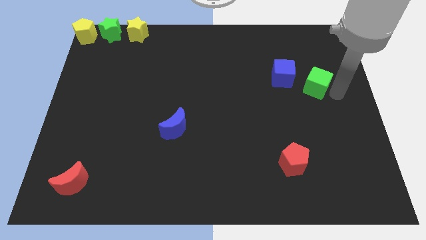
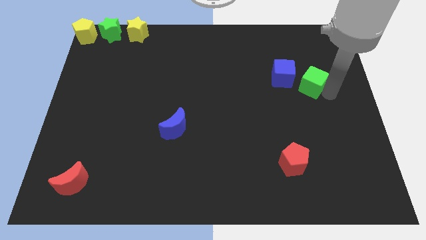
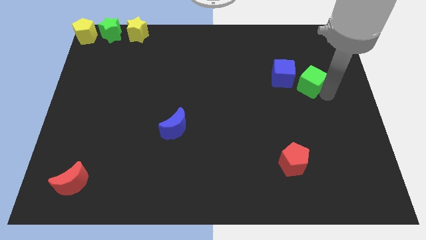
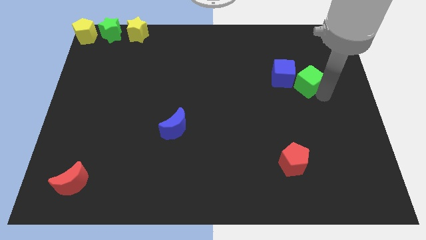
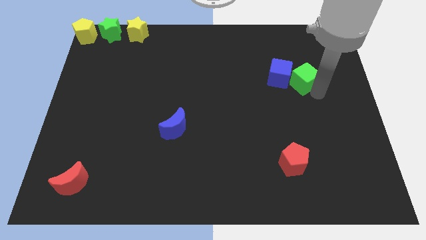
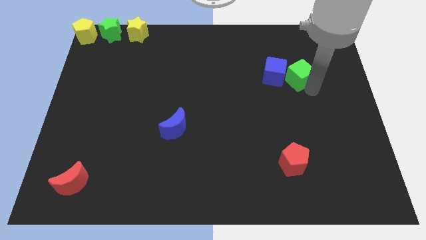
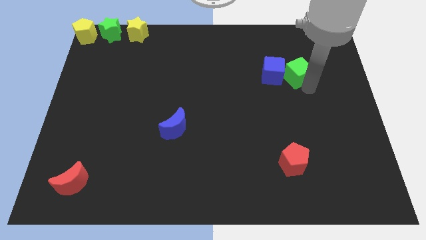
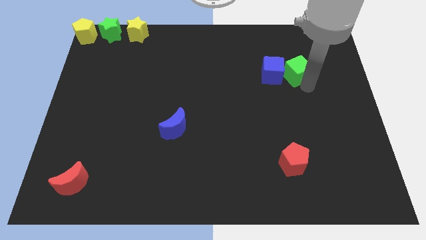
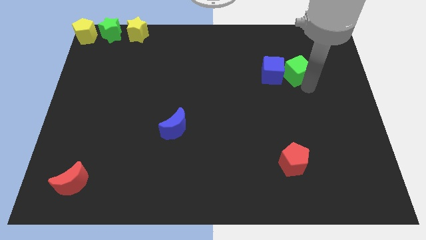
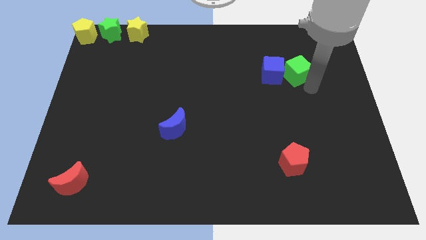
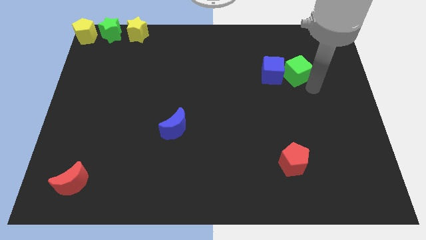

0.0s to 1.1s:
push the green cube into the blue cube

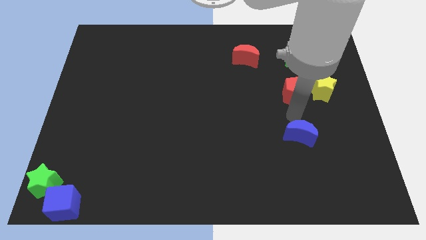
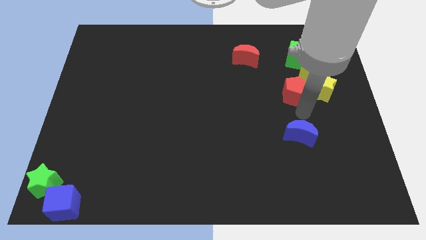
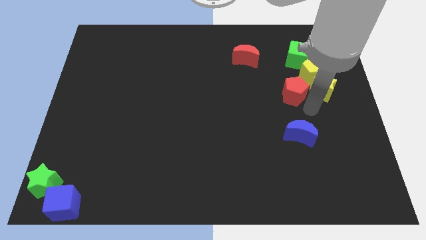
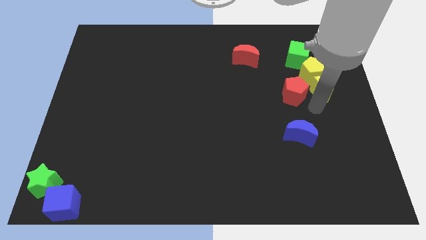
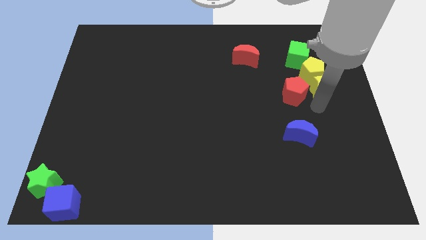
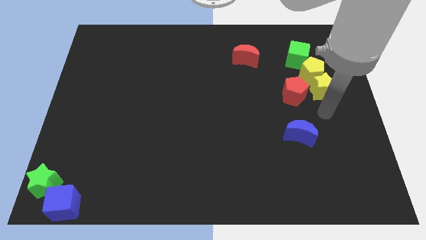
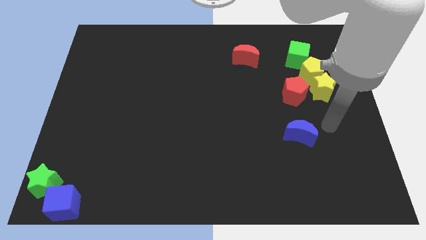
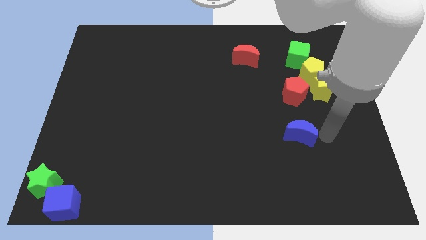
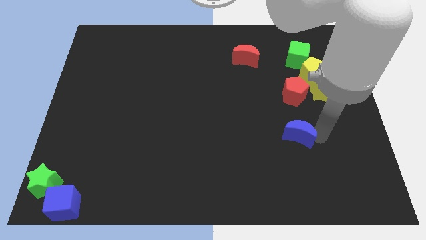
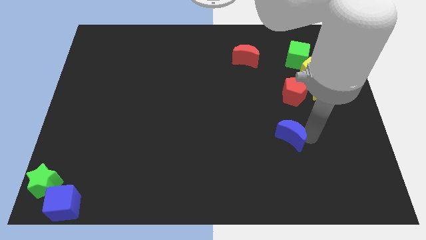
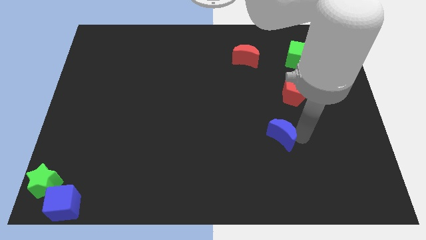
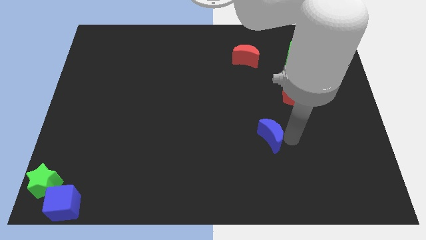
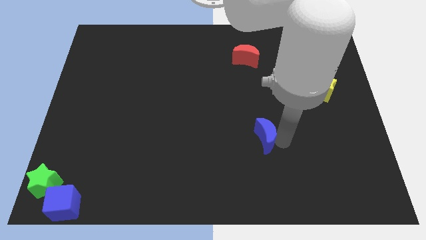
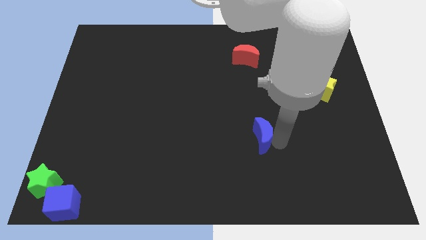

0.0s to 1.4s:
push the blue crescent to the bottom left of the red pentagon

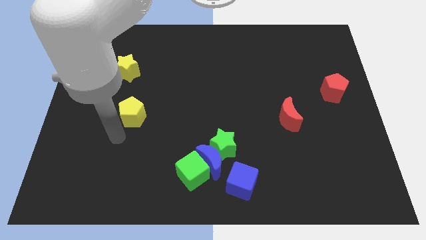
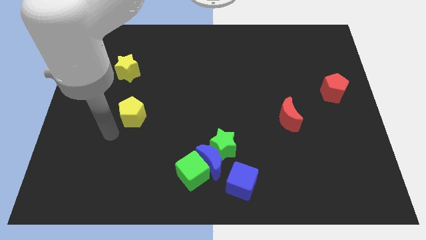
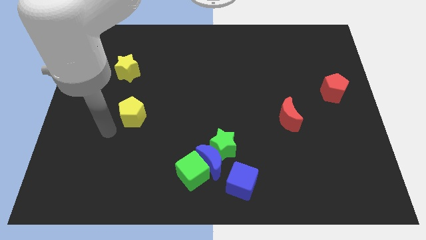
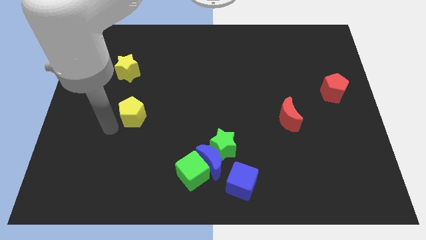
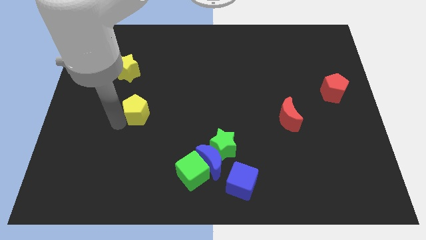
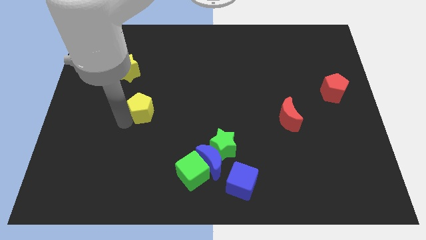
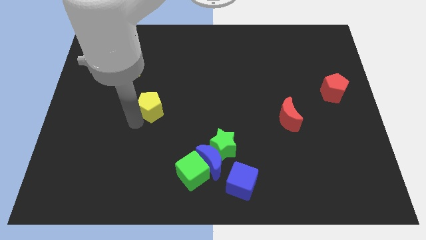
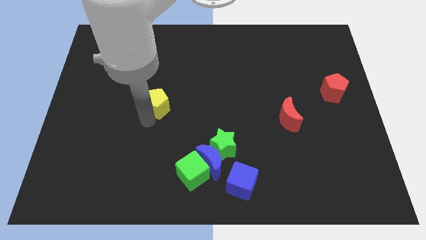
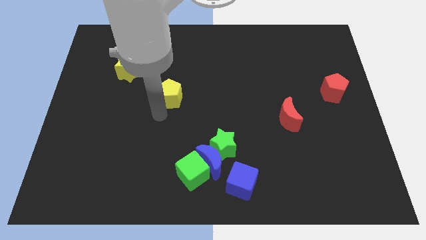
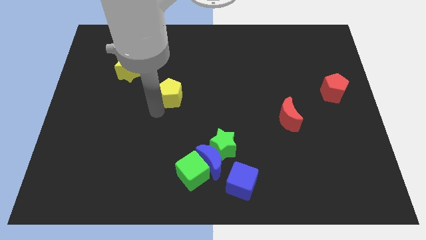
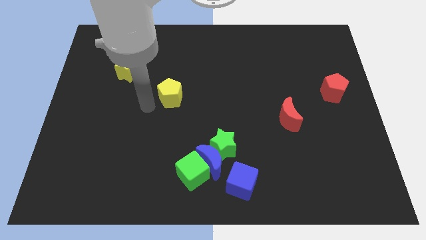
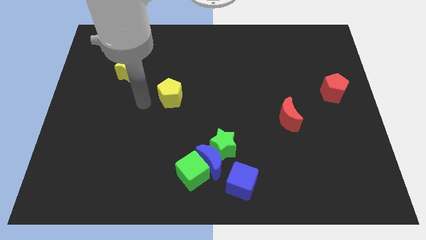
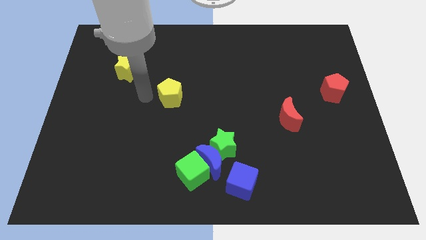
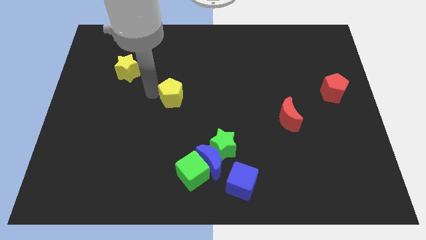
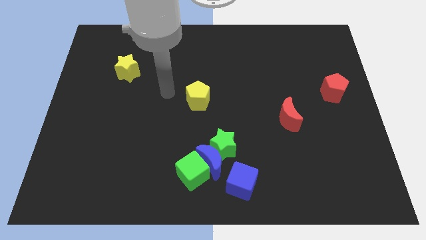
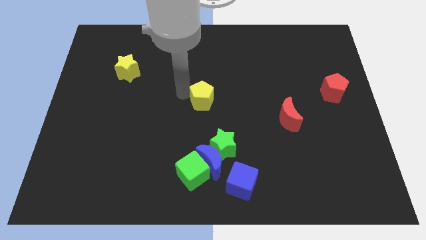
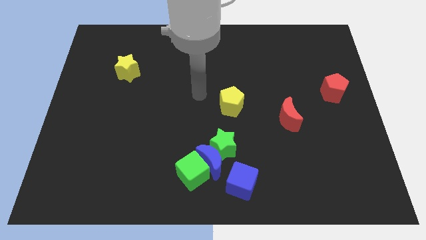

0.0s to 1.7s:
place the yellow pentagon vertically above the green star

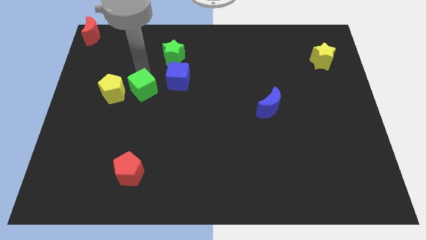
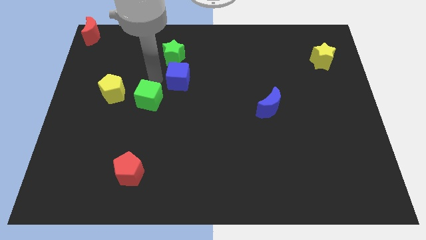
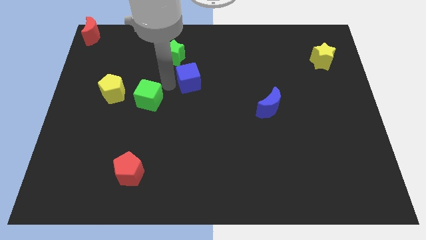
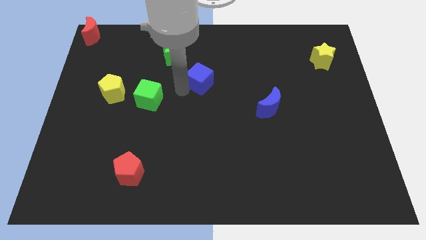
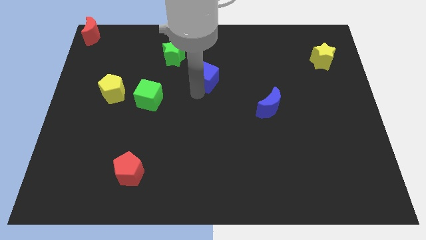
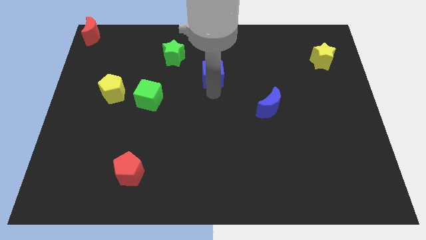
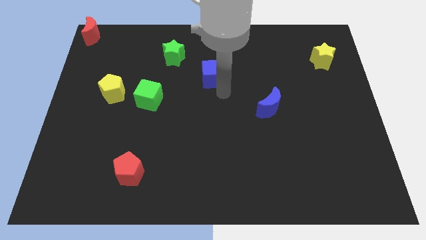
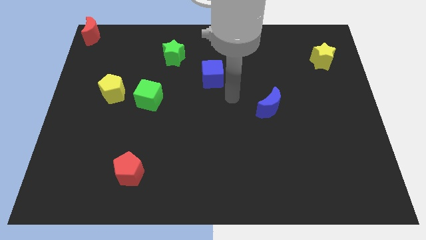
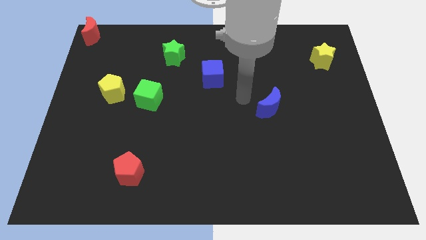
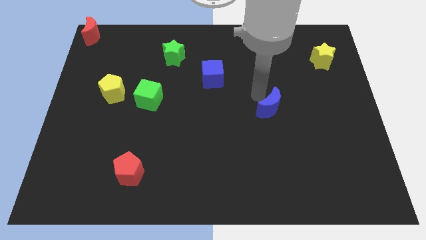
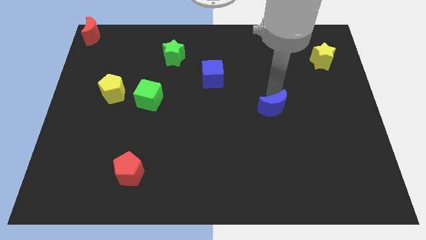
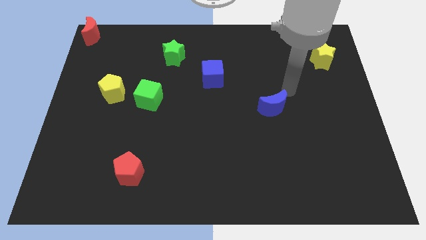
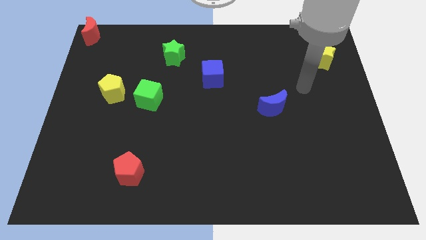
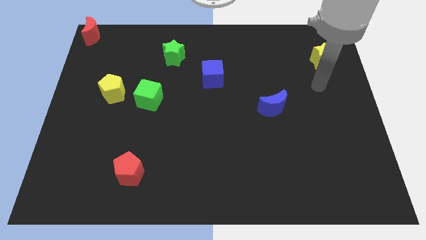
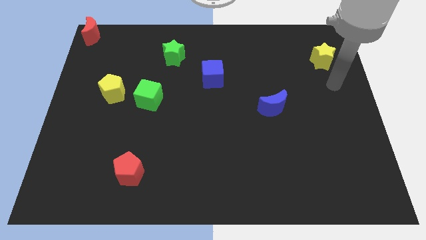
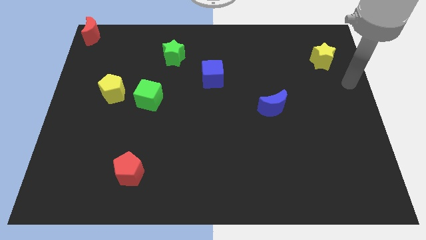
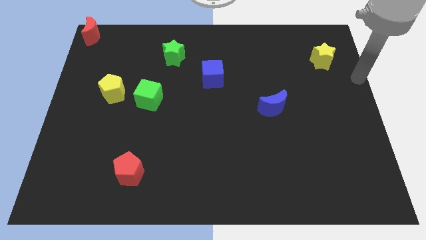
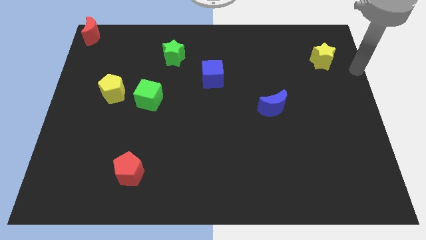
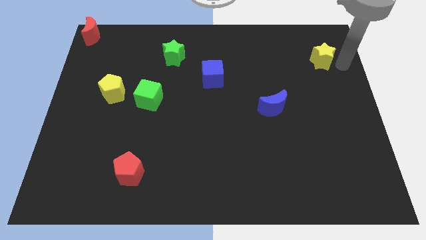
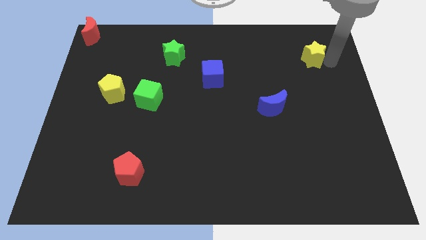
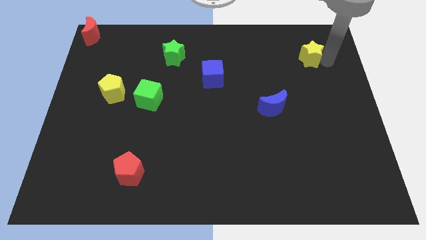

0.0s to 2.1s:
slide the blue cube diagonal to the blue moon

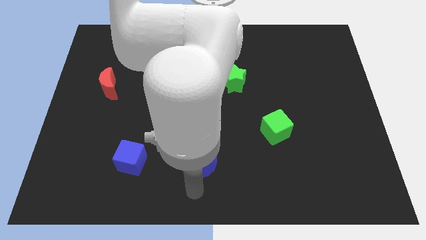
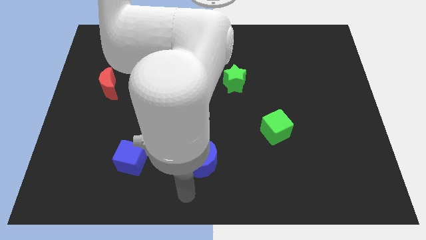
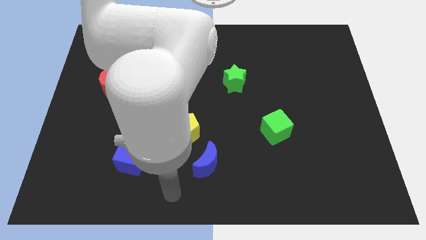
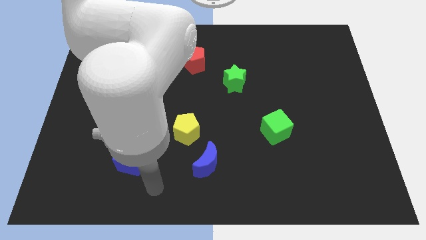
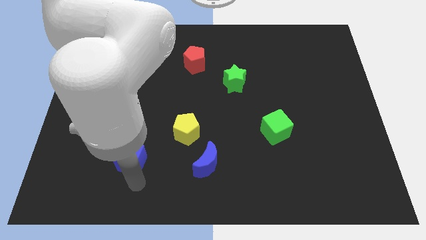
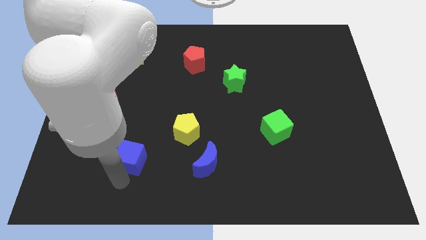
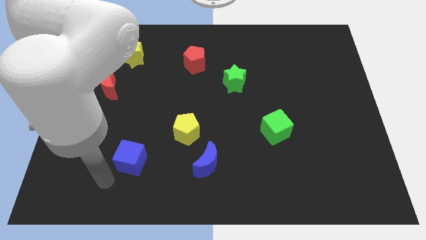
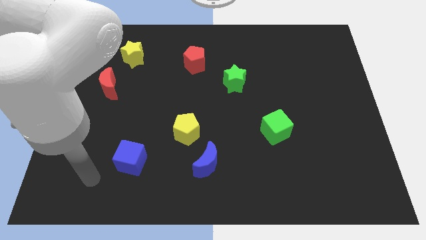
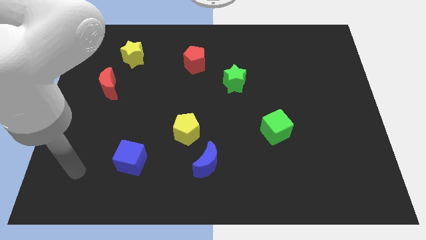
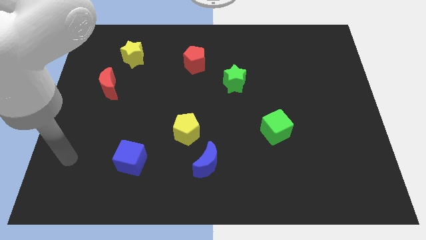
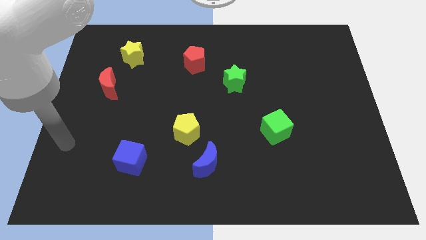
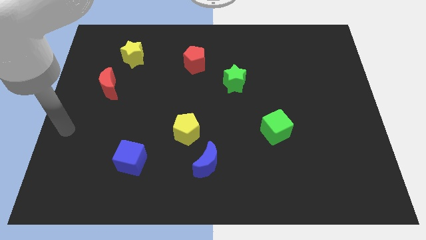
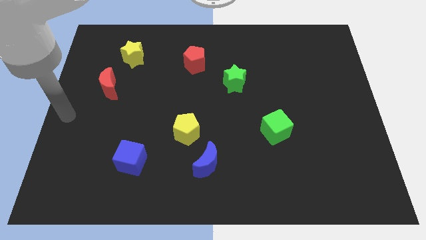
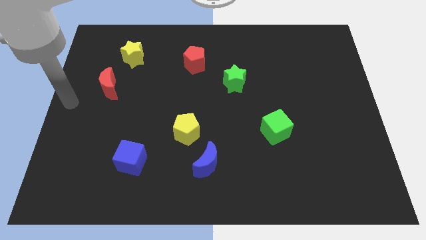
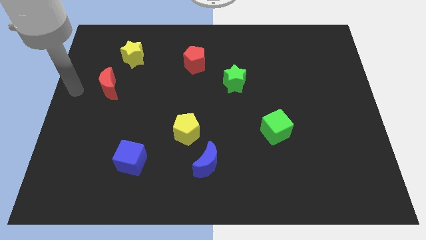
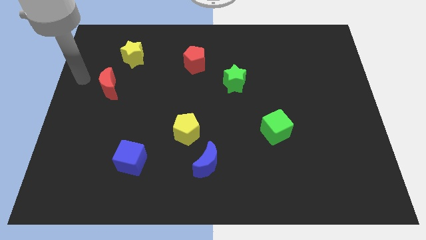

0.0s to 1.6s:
place your arm to the left of red moon

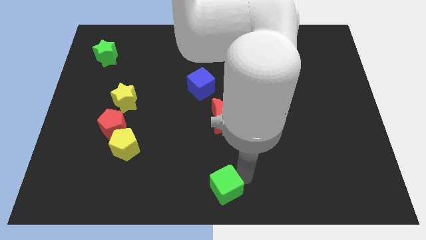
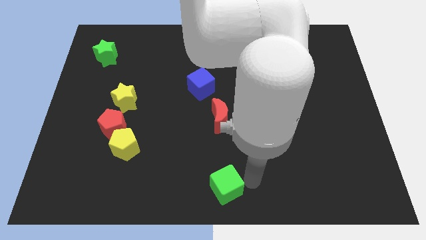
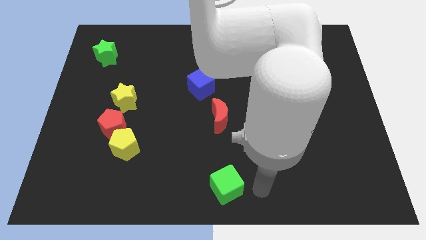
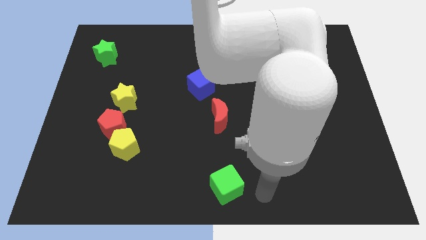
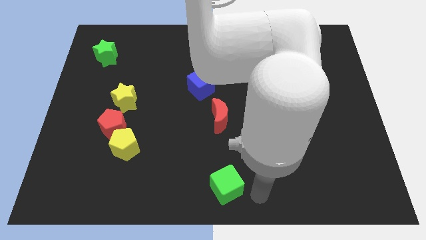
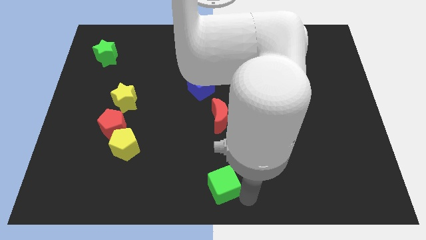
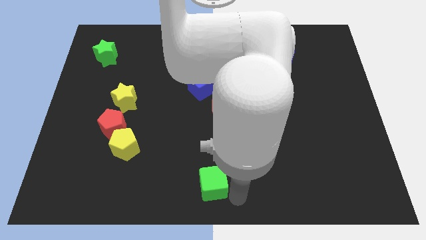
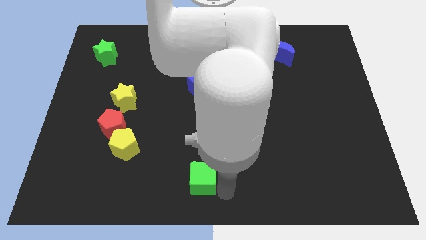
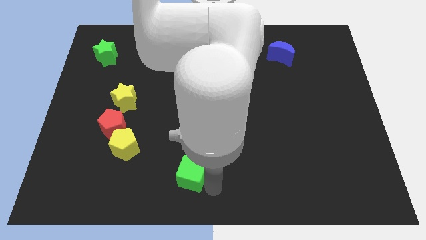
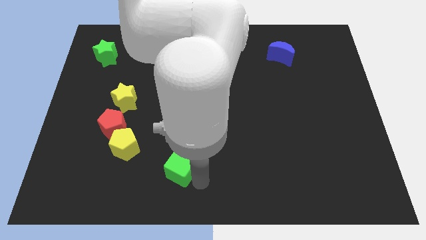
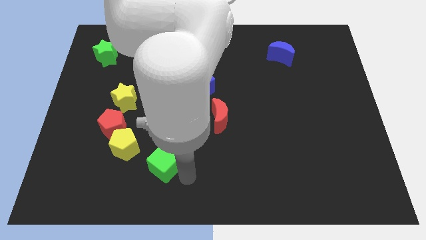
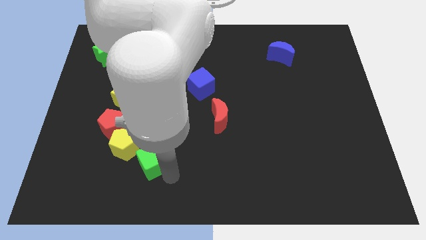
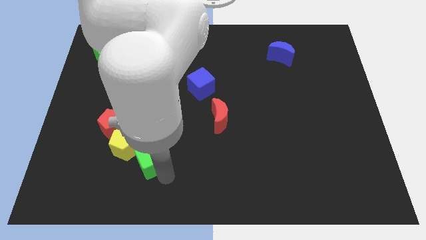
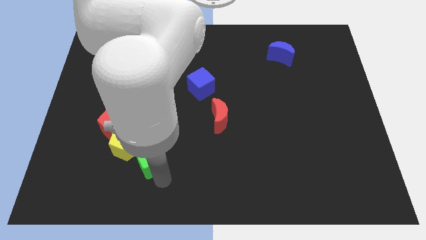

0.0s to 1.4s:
drag the green cube slightly to the left
